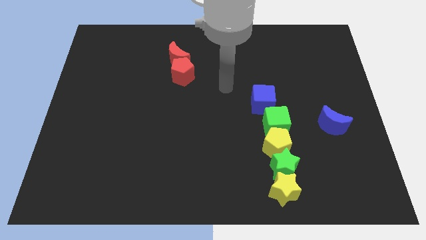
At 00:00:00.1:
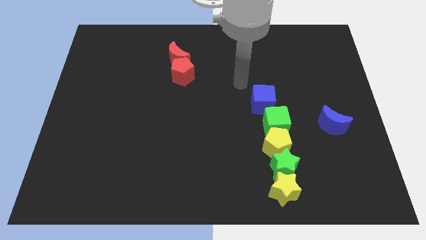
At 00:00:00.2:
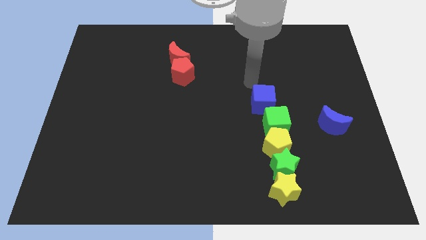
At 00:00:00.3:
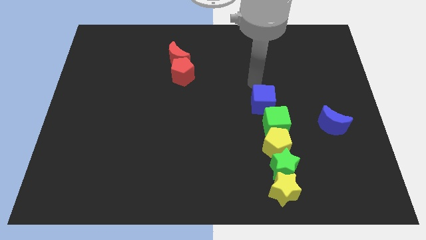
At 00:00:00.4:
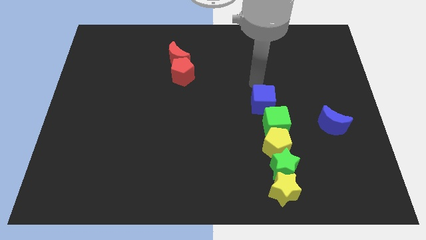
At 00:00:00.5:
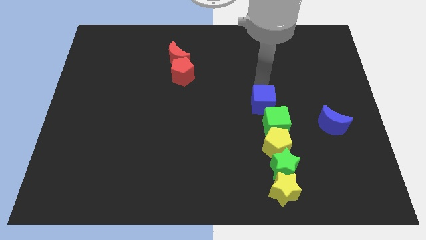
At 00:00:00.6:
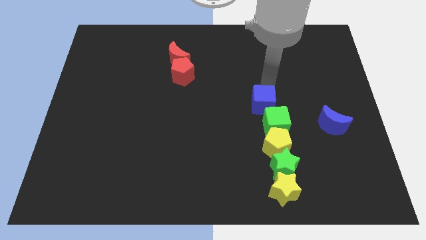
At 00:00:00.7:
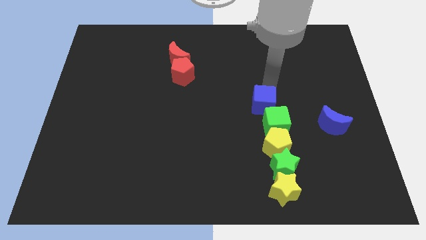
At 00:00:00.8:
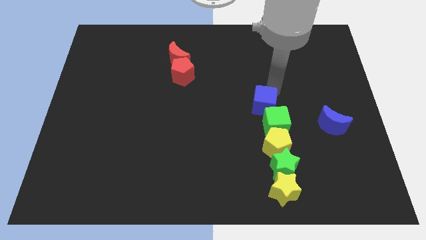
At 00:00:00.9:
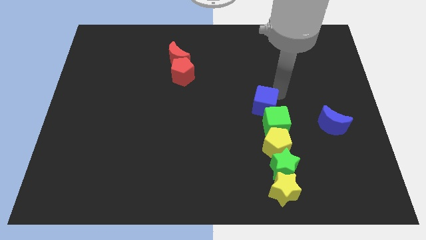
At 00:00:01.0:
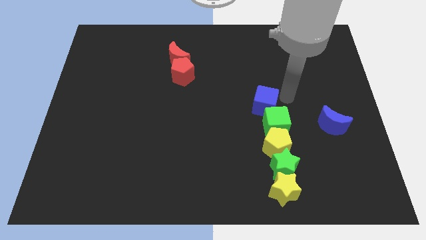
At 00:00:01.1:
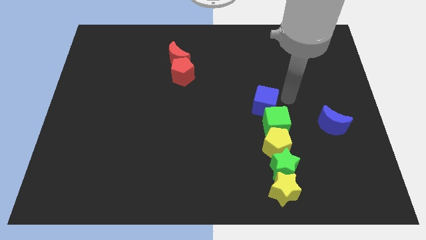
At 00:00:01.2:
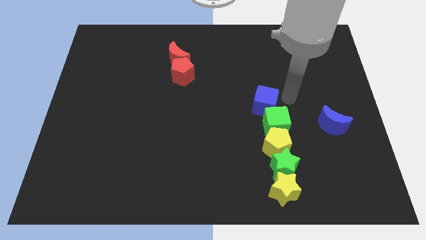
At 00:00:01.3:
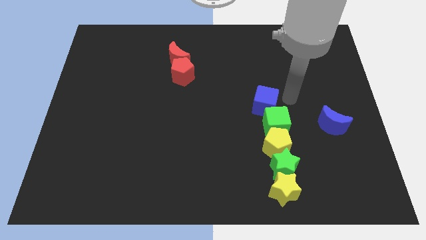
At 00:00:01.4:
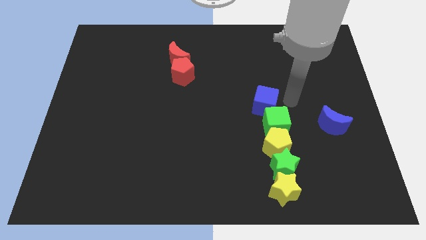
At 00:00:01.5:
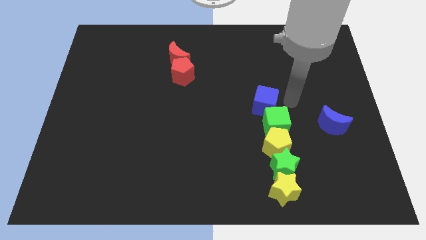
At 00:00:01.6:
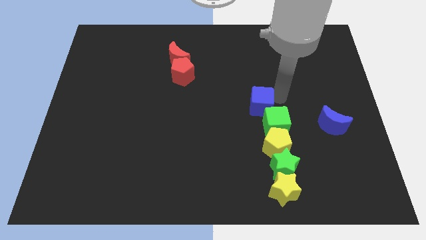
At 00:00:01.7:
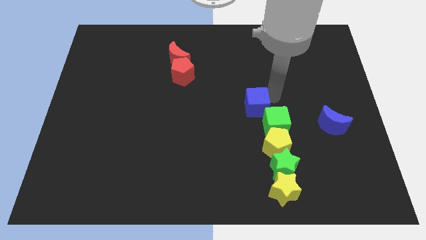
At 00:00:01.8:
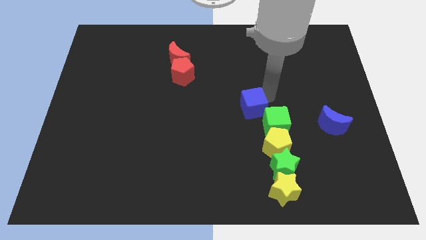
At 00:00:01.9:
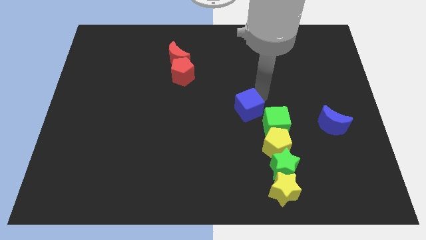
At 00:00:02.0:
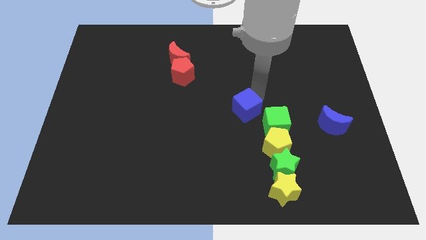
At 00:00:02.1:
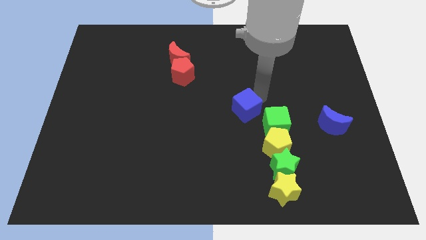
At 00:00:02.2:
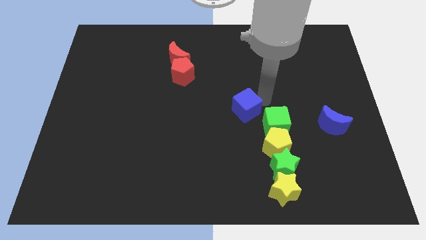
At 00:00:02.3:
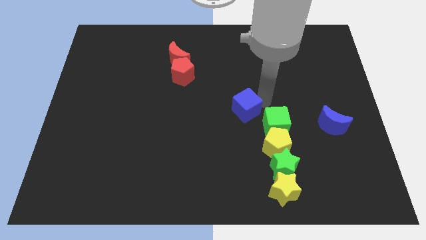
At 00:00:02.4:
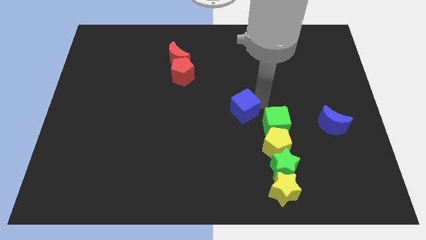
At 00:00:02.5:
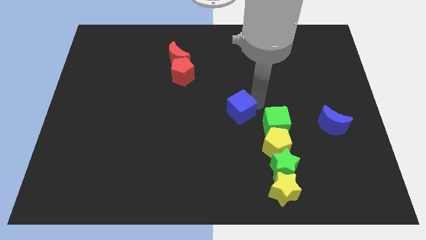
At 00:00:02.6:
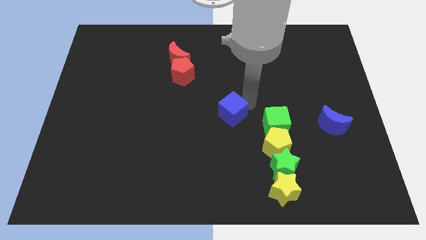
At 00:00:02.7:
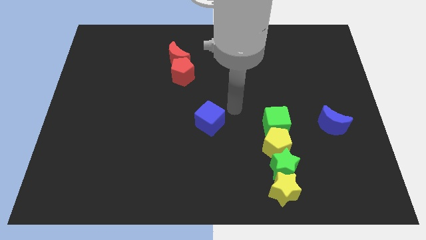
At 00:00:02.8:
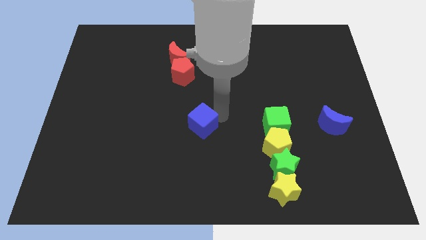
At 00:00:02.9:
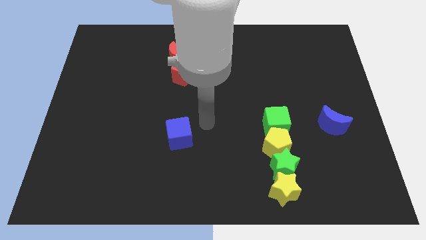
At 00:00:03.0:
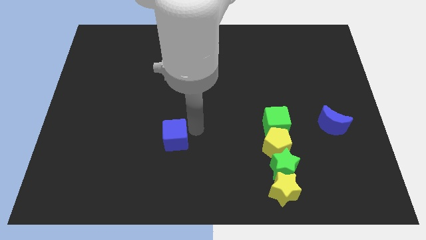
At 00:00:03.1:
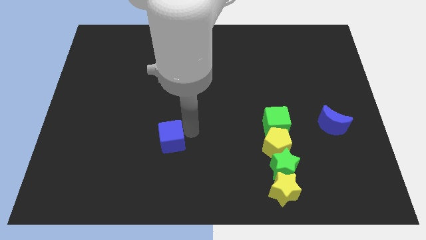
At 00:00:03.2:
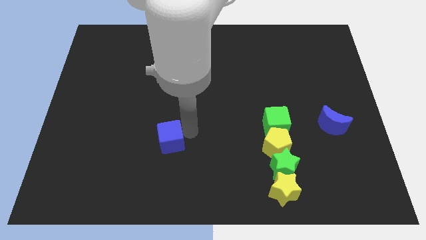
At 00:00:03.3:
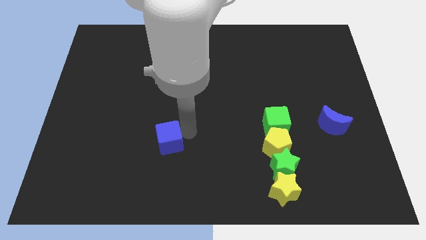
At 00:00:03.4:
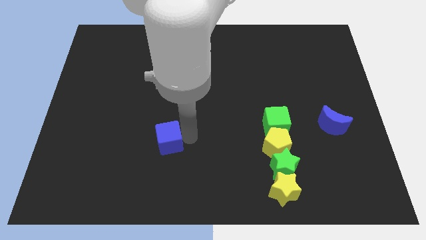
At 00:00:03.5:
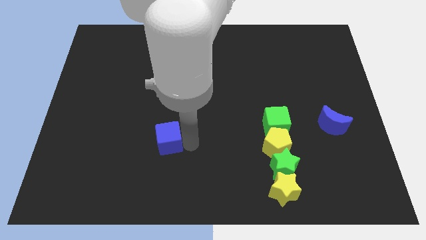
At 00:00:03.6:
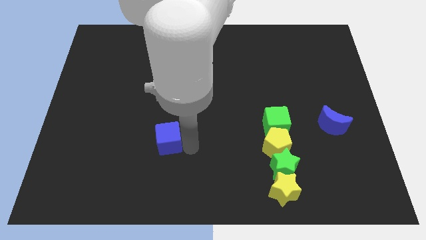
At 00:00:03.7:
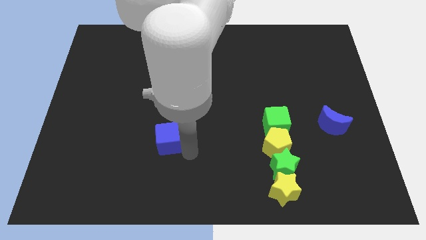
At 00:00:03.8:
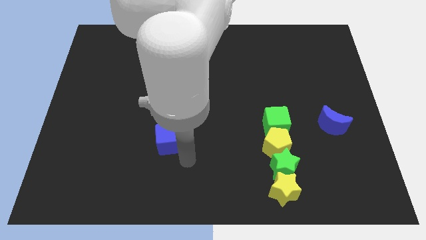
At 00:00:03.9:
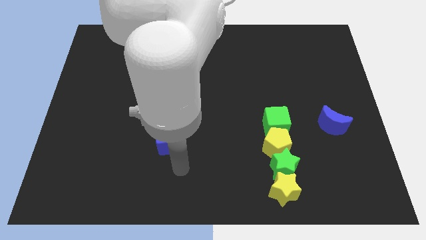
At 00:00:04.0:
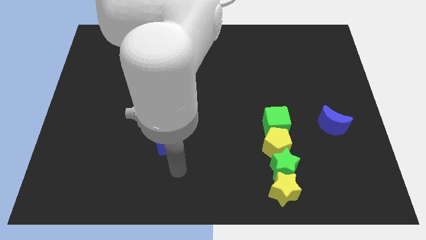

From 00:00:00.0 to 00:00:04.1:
separate blue cube from green cube

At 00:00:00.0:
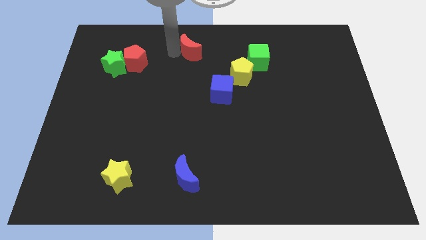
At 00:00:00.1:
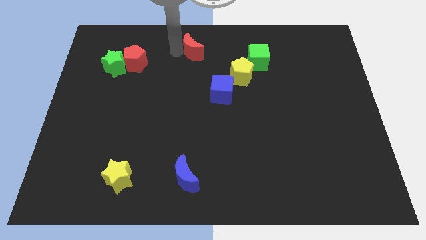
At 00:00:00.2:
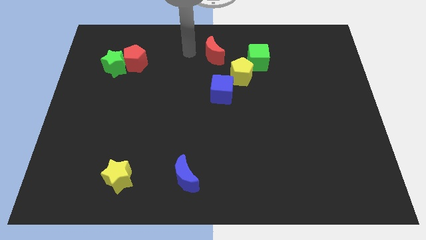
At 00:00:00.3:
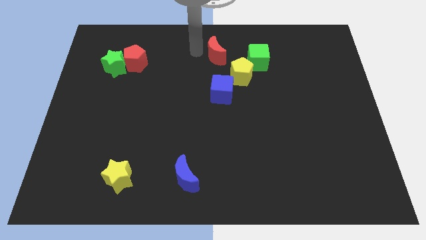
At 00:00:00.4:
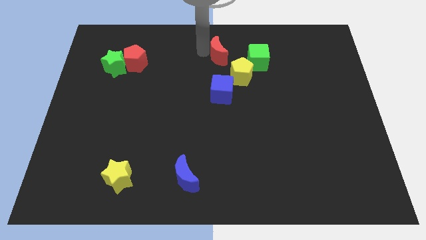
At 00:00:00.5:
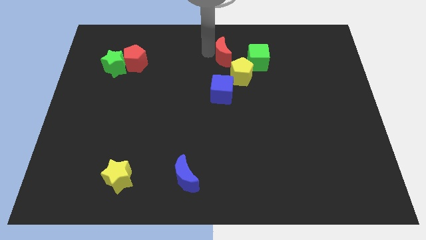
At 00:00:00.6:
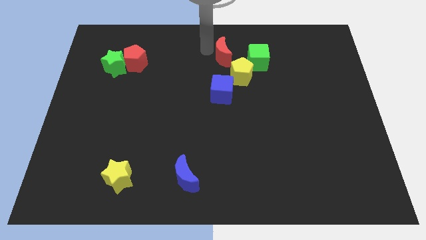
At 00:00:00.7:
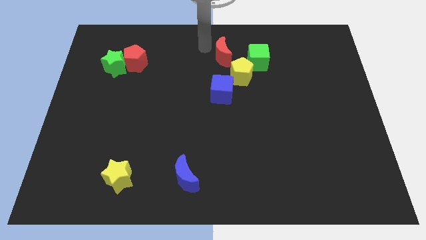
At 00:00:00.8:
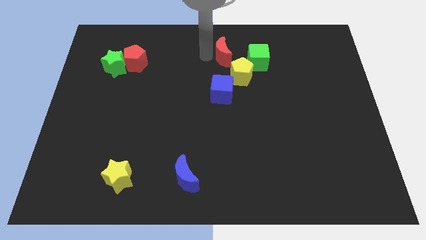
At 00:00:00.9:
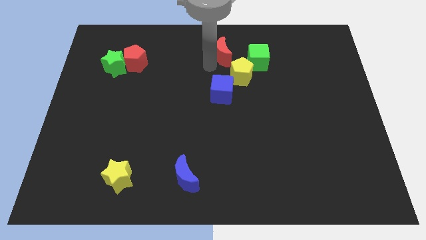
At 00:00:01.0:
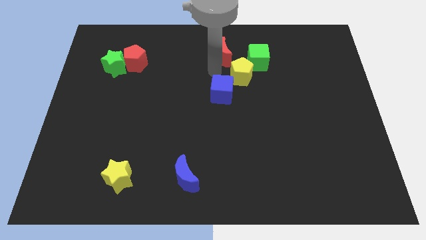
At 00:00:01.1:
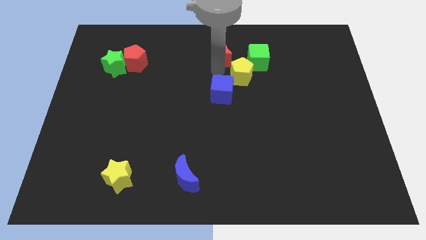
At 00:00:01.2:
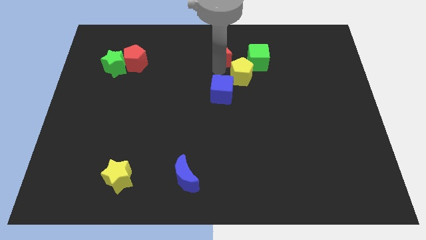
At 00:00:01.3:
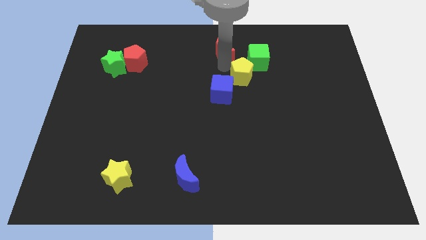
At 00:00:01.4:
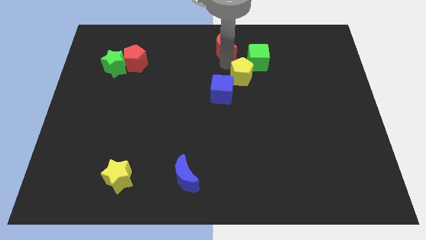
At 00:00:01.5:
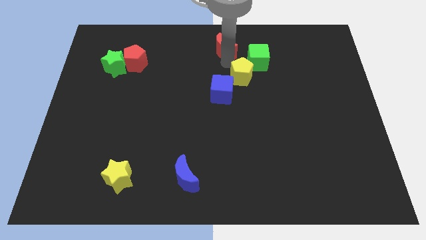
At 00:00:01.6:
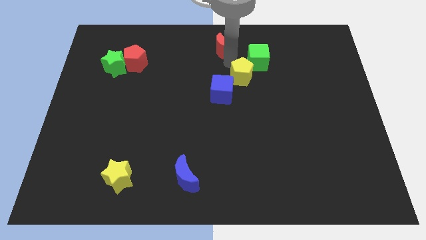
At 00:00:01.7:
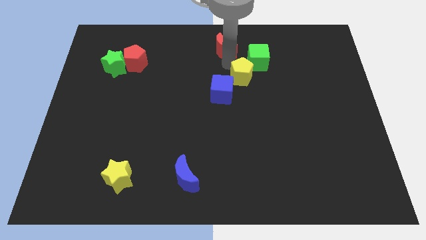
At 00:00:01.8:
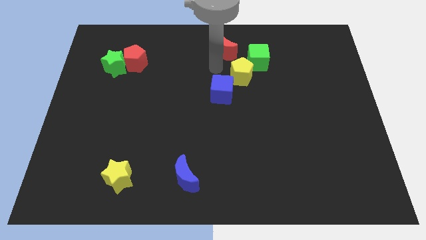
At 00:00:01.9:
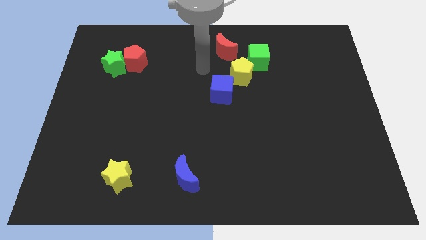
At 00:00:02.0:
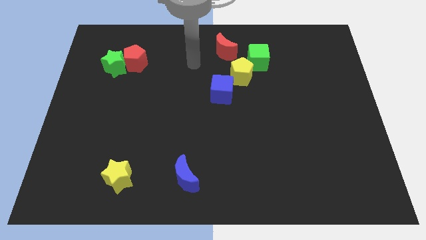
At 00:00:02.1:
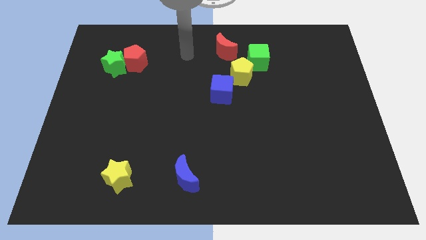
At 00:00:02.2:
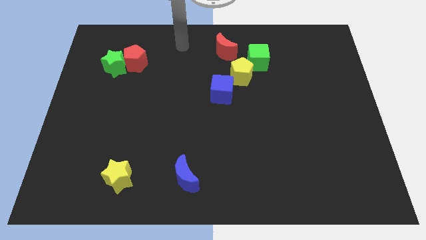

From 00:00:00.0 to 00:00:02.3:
push red crescent towards the green cube

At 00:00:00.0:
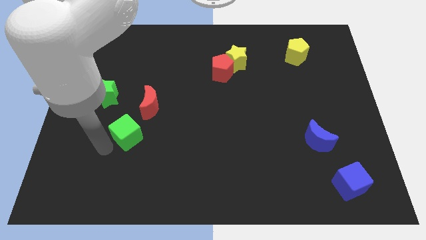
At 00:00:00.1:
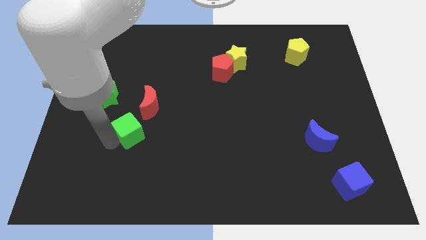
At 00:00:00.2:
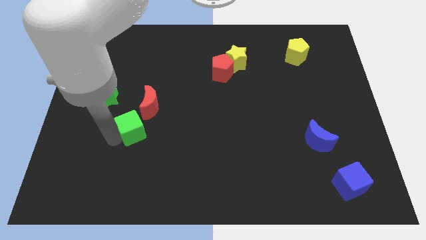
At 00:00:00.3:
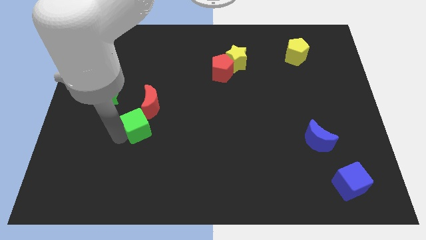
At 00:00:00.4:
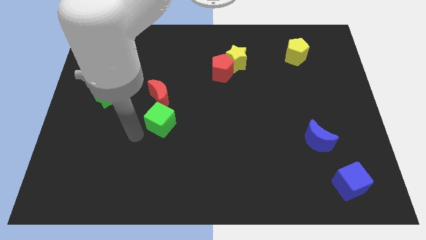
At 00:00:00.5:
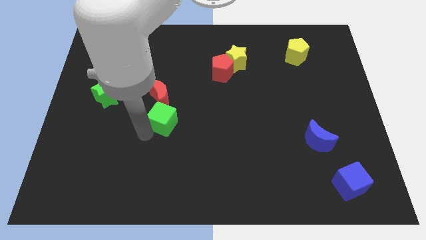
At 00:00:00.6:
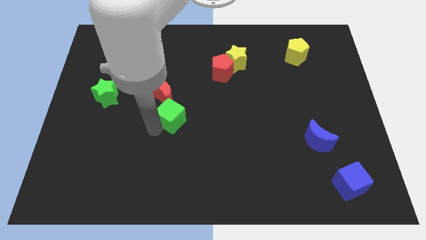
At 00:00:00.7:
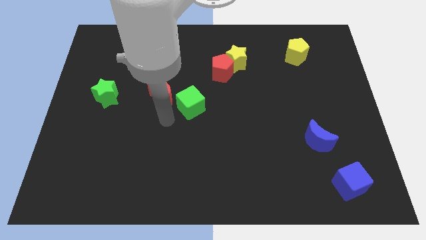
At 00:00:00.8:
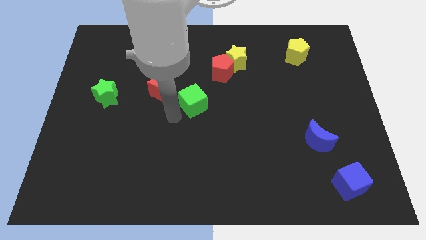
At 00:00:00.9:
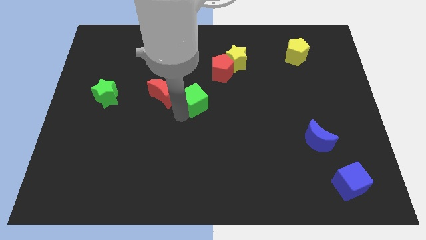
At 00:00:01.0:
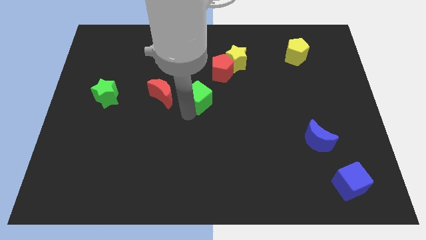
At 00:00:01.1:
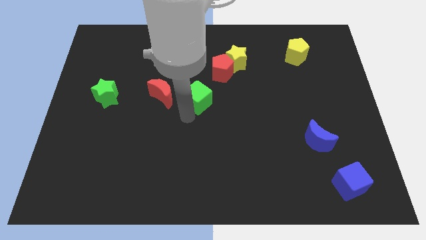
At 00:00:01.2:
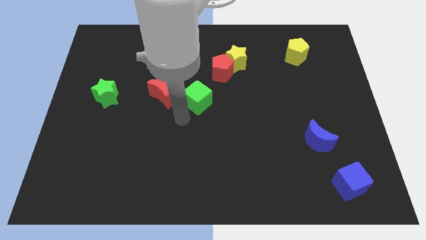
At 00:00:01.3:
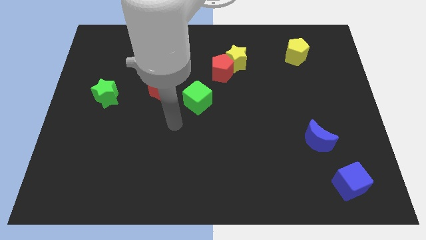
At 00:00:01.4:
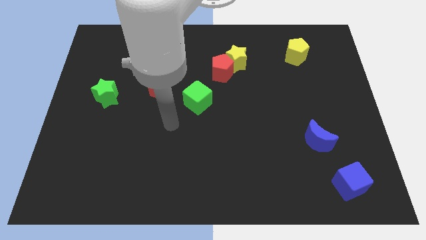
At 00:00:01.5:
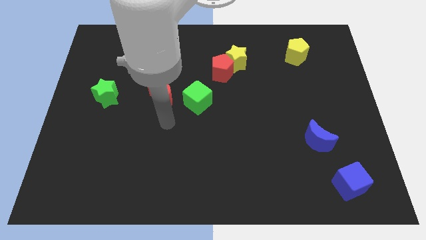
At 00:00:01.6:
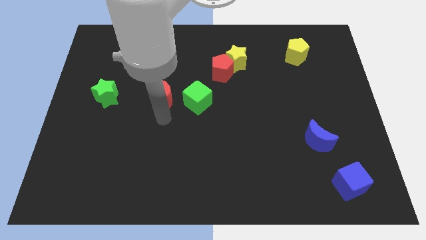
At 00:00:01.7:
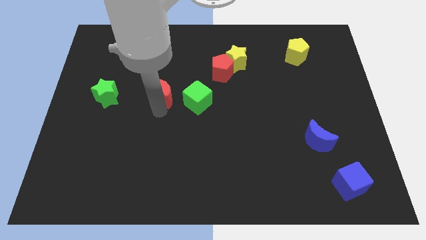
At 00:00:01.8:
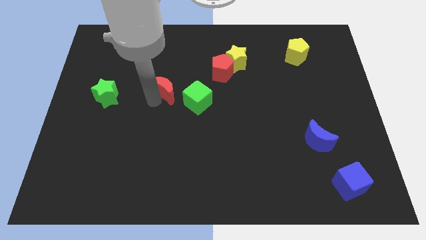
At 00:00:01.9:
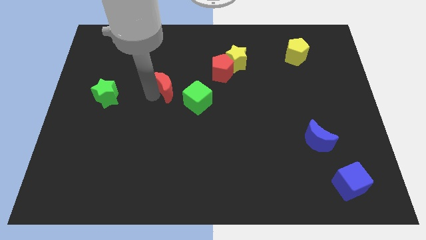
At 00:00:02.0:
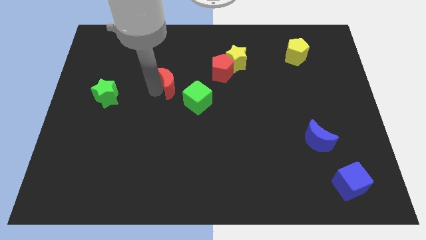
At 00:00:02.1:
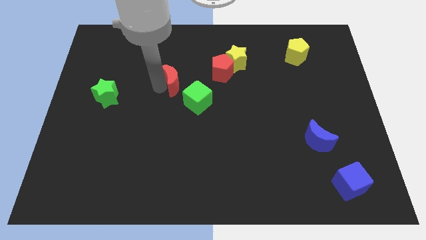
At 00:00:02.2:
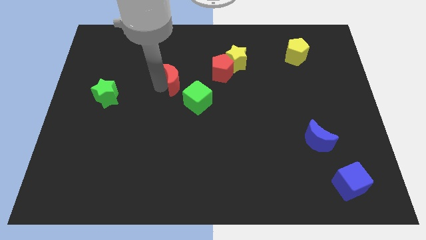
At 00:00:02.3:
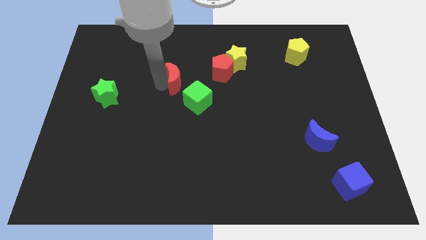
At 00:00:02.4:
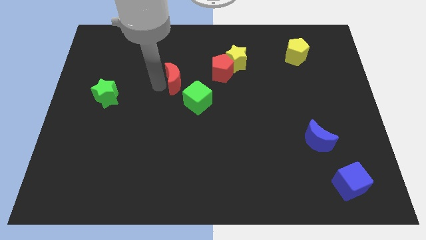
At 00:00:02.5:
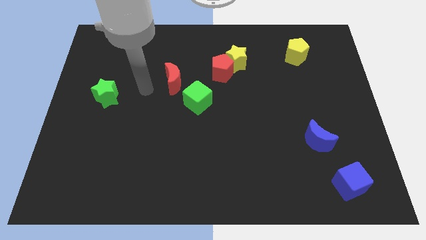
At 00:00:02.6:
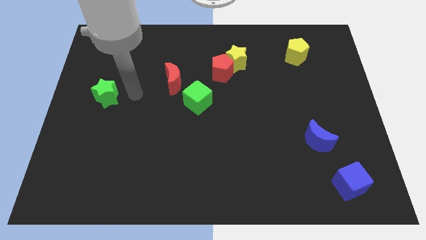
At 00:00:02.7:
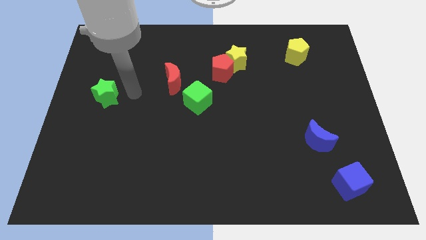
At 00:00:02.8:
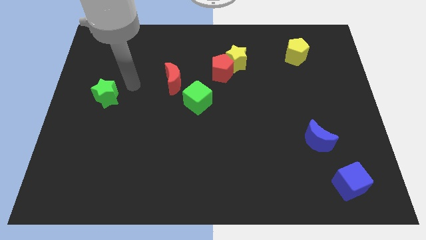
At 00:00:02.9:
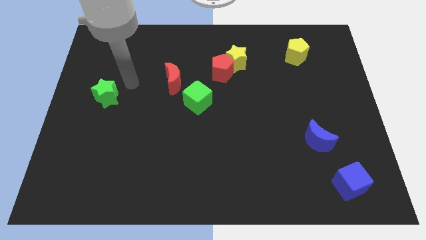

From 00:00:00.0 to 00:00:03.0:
place your hand in between the green star and red moon
